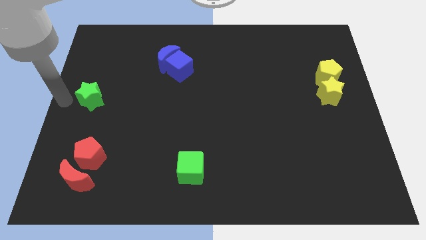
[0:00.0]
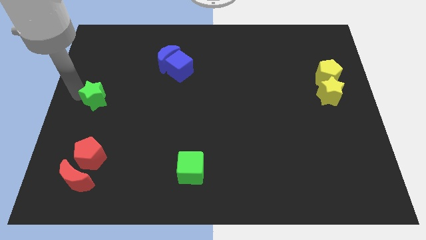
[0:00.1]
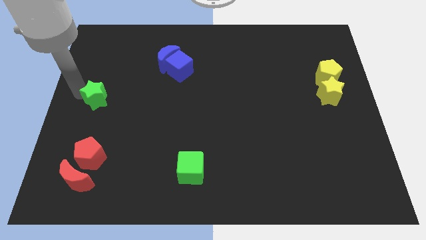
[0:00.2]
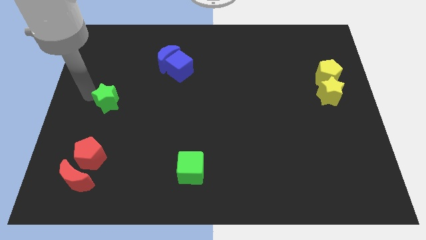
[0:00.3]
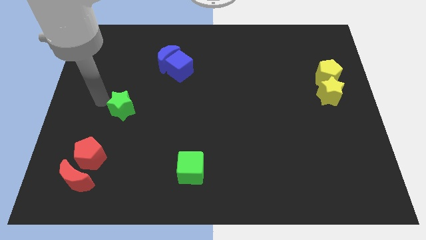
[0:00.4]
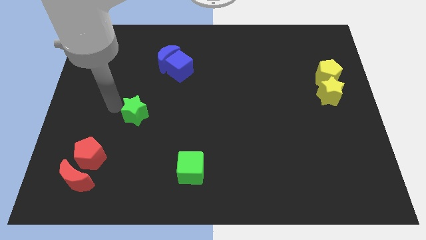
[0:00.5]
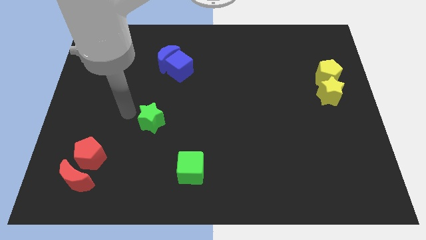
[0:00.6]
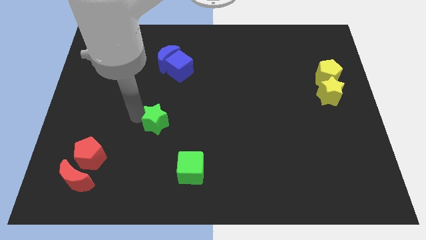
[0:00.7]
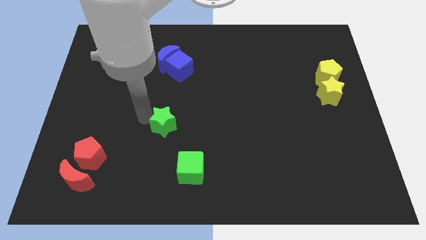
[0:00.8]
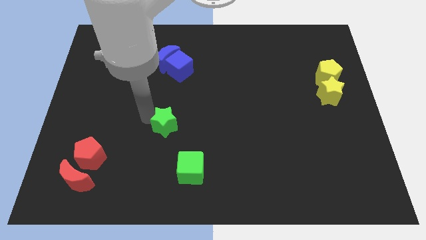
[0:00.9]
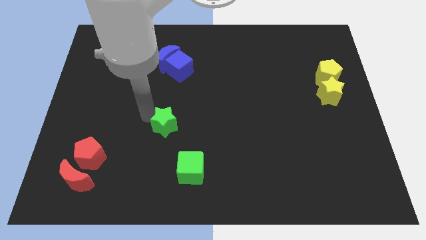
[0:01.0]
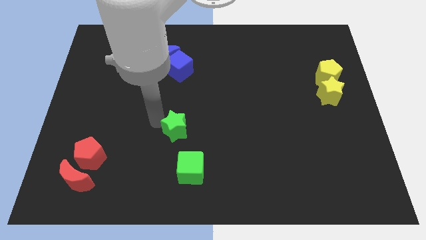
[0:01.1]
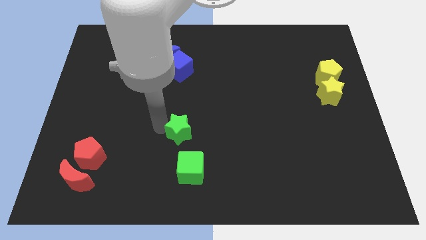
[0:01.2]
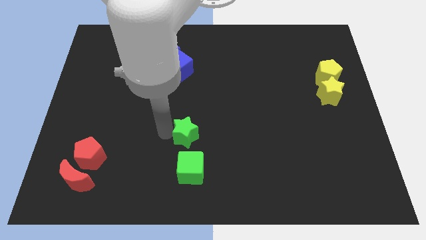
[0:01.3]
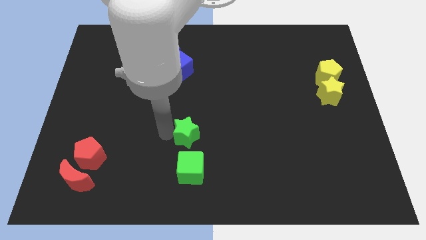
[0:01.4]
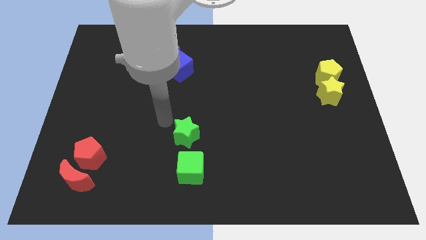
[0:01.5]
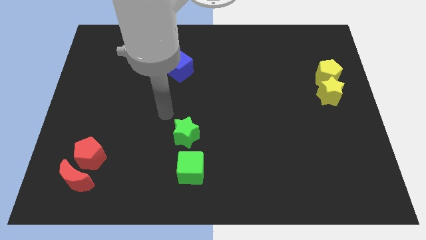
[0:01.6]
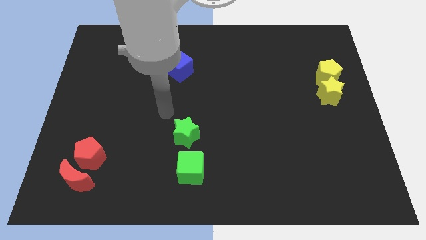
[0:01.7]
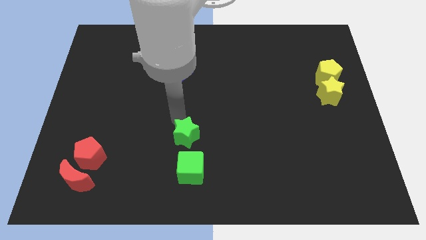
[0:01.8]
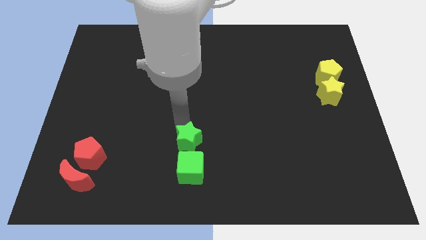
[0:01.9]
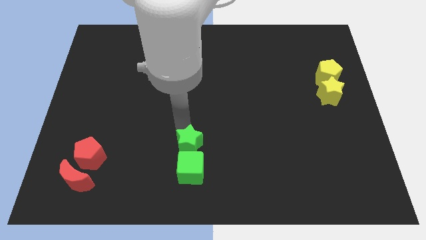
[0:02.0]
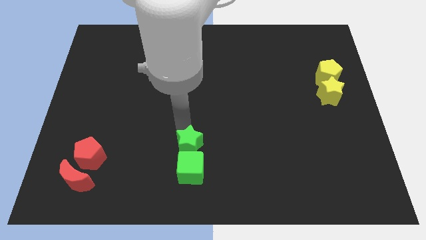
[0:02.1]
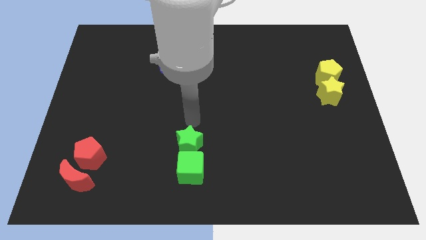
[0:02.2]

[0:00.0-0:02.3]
push the green star to the top of the green cube

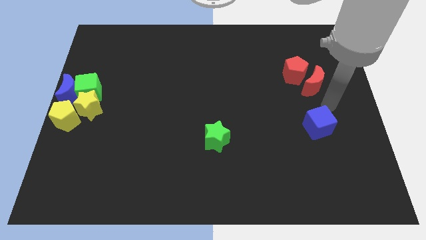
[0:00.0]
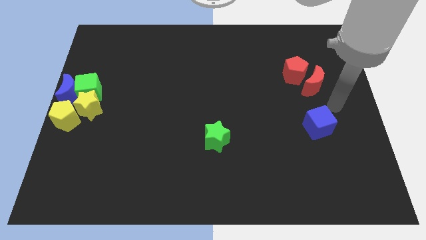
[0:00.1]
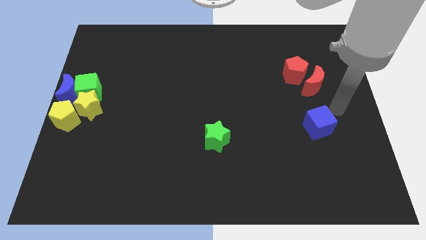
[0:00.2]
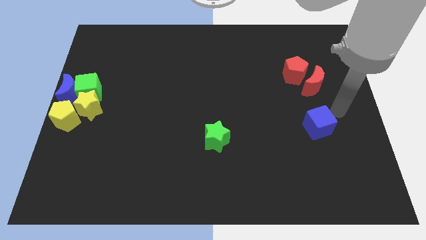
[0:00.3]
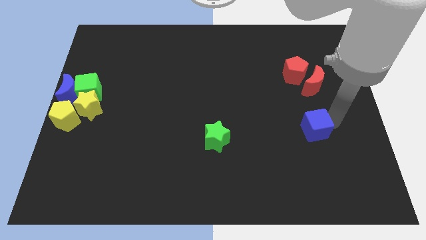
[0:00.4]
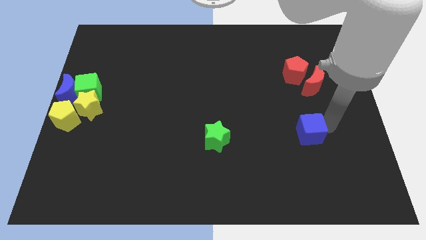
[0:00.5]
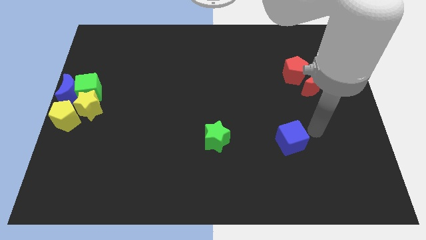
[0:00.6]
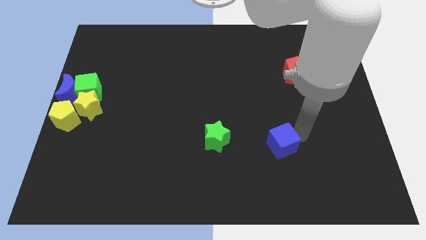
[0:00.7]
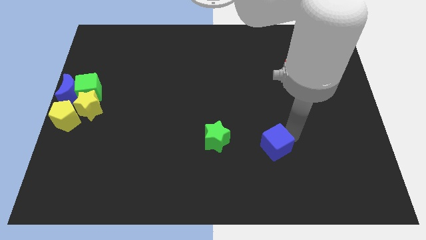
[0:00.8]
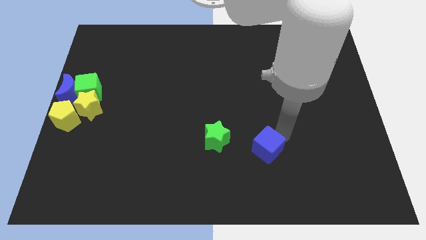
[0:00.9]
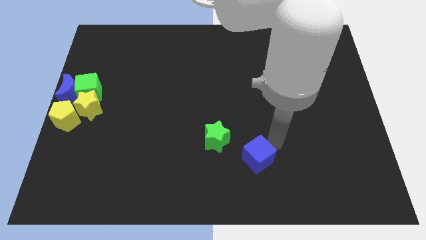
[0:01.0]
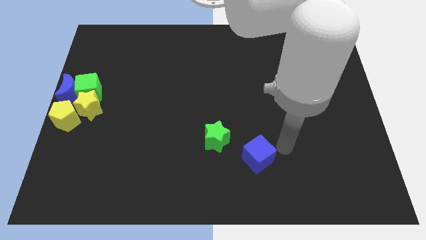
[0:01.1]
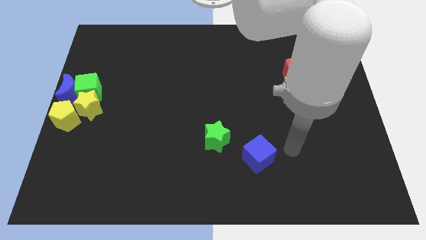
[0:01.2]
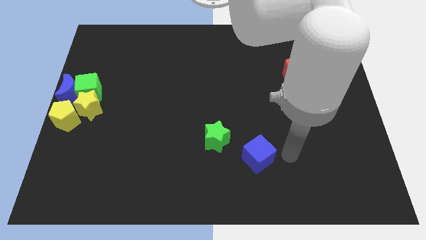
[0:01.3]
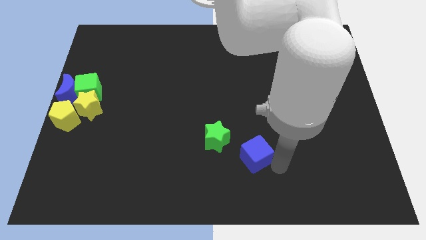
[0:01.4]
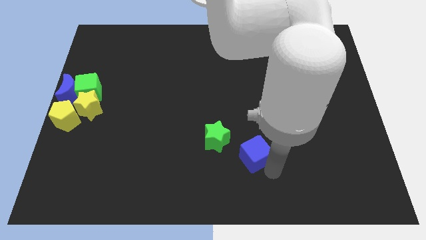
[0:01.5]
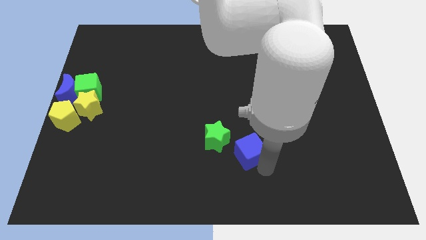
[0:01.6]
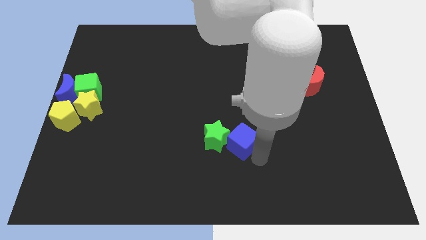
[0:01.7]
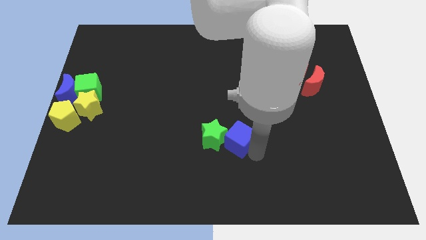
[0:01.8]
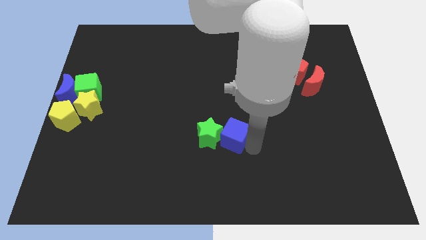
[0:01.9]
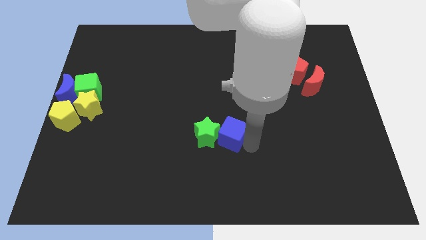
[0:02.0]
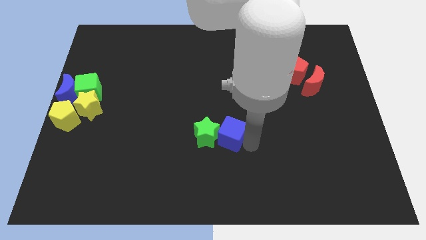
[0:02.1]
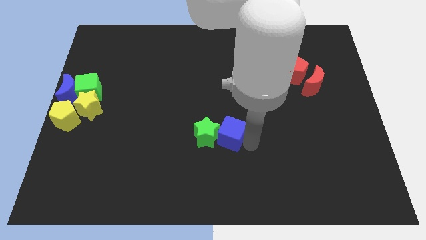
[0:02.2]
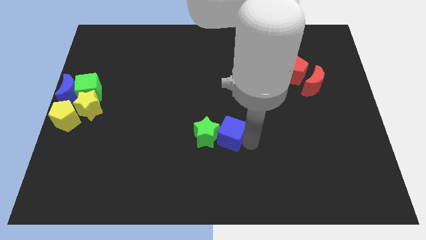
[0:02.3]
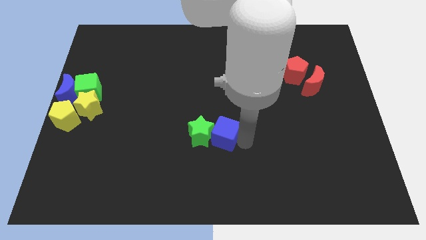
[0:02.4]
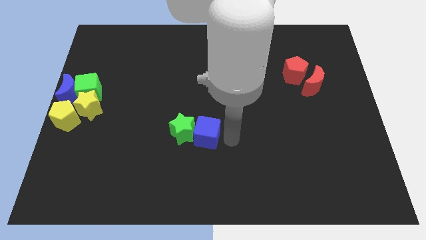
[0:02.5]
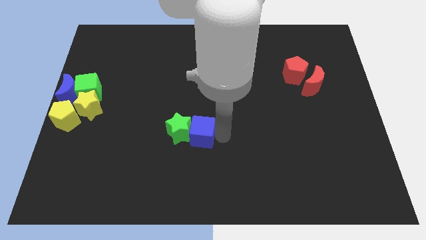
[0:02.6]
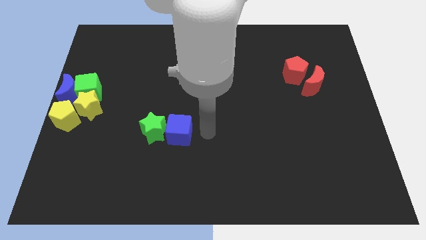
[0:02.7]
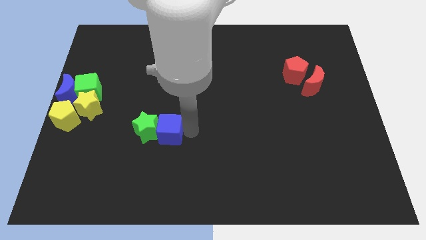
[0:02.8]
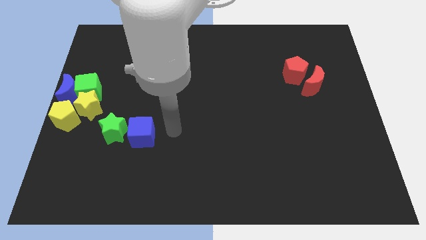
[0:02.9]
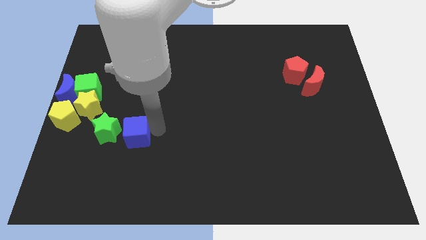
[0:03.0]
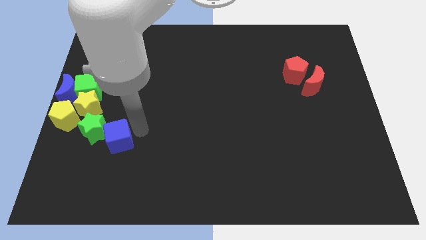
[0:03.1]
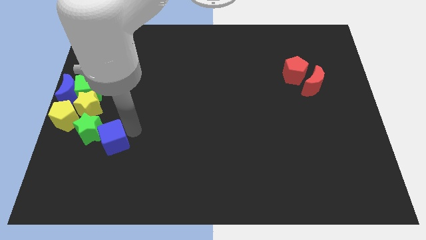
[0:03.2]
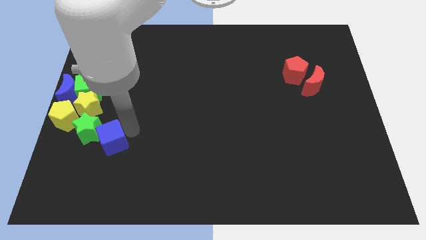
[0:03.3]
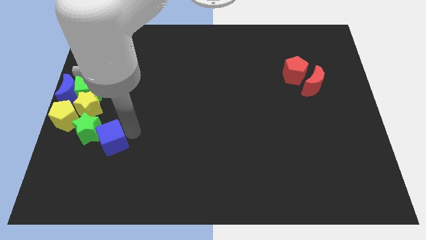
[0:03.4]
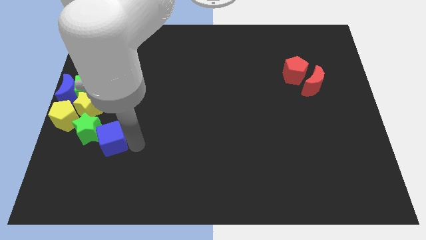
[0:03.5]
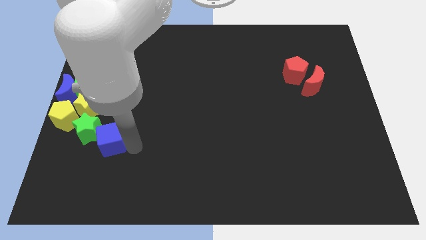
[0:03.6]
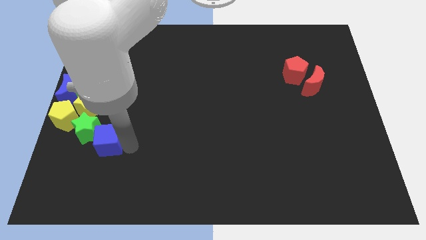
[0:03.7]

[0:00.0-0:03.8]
move the green star and blue cube towards the yellow blocks

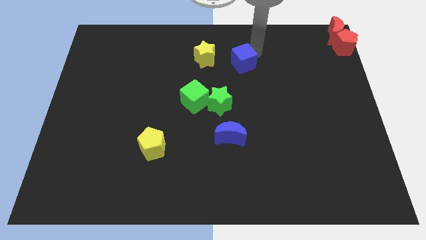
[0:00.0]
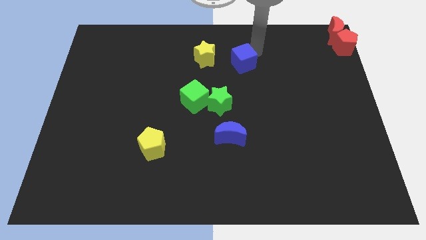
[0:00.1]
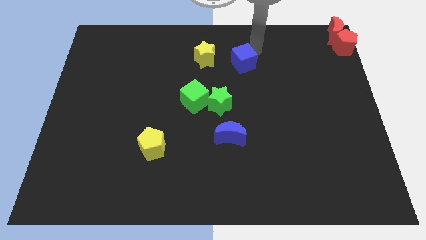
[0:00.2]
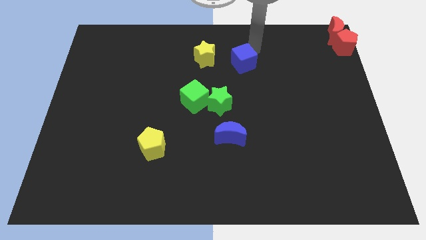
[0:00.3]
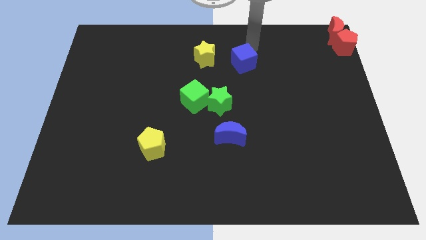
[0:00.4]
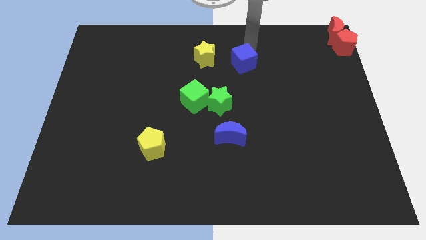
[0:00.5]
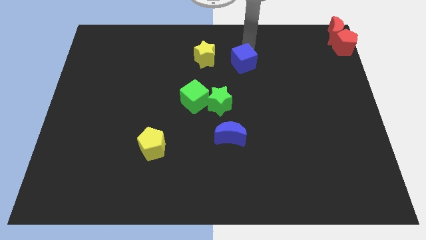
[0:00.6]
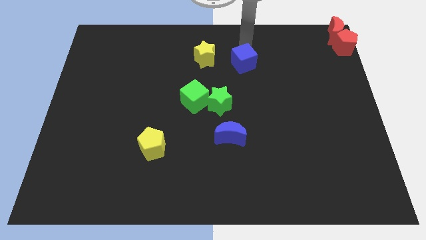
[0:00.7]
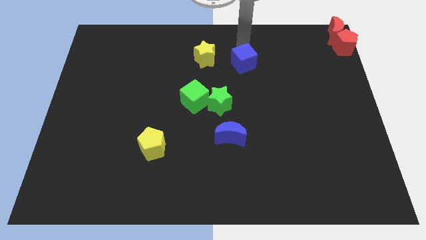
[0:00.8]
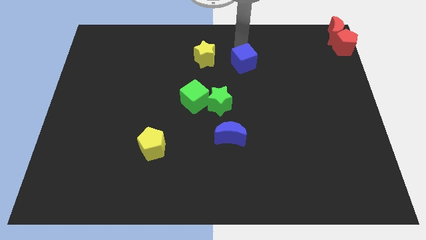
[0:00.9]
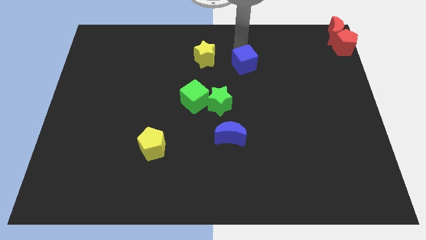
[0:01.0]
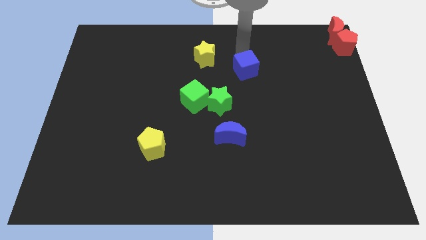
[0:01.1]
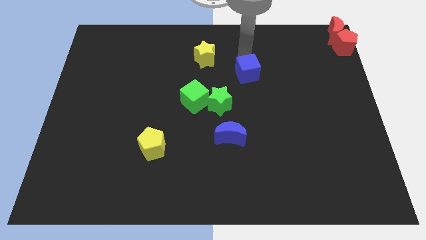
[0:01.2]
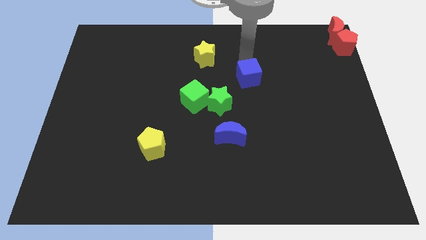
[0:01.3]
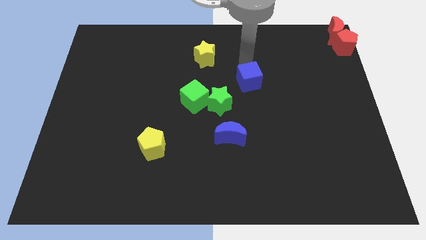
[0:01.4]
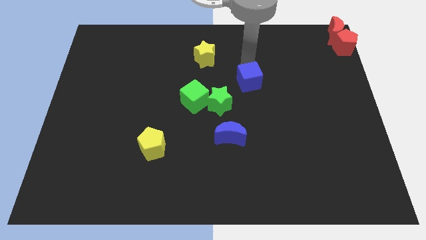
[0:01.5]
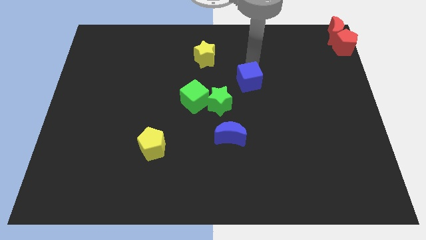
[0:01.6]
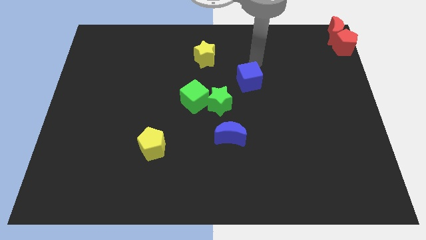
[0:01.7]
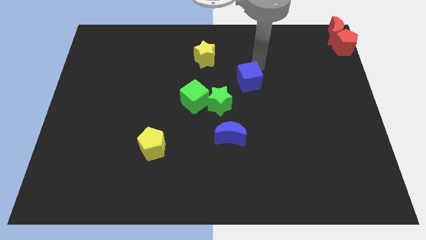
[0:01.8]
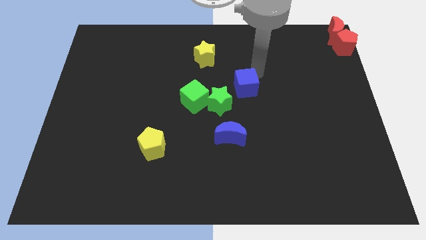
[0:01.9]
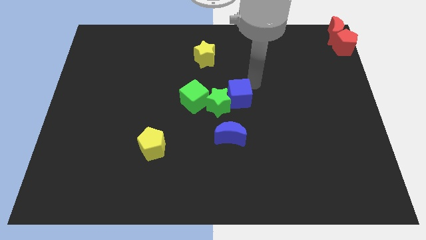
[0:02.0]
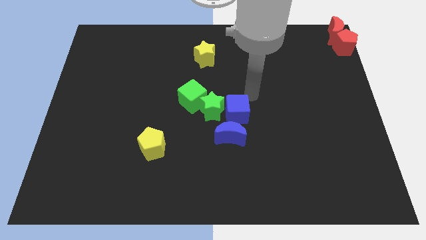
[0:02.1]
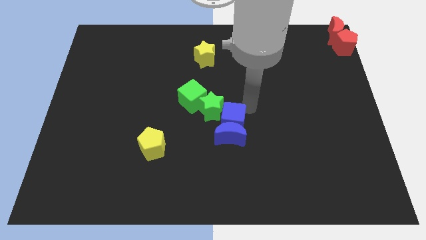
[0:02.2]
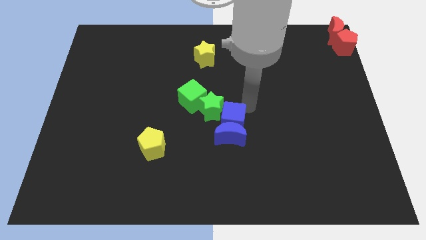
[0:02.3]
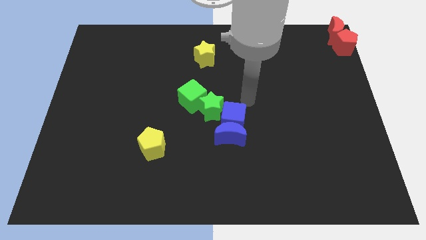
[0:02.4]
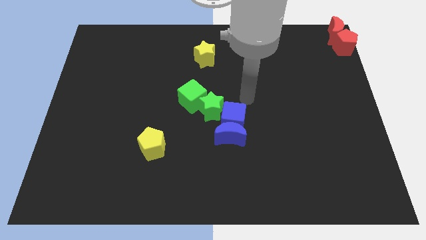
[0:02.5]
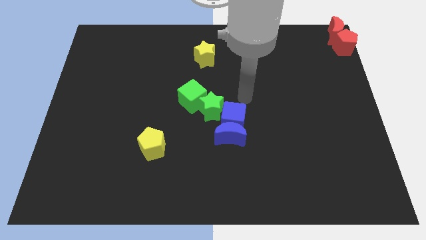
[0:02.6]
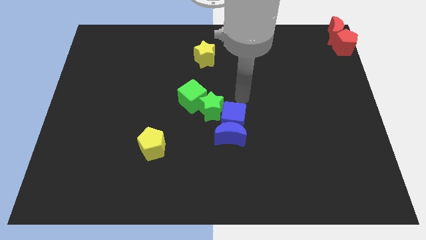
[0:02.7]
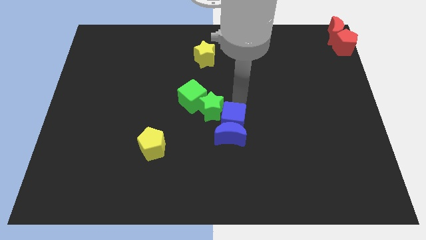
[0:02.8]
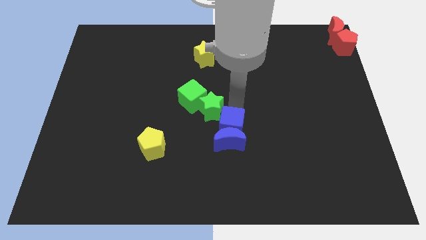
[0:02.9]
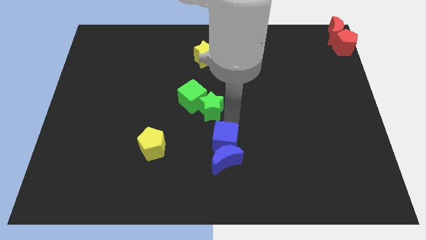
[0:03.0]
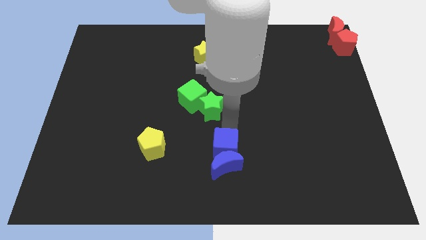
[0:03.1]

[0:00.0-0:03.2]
move blue cube into blue moon
